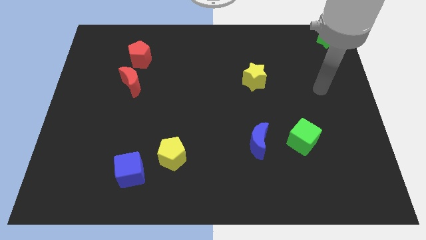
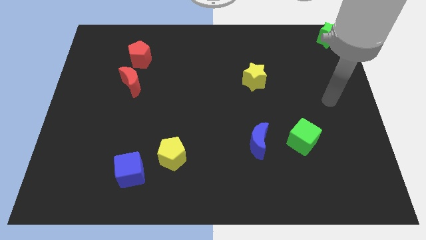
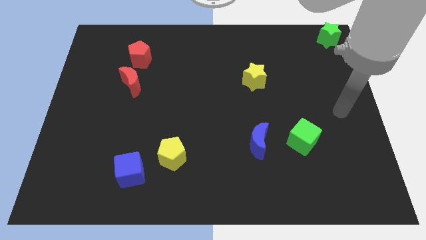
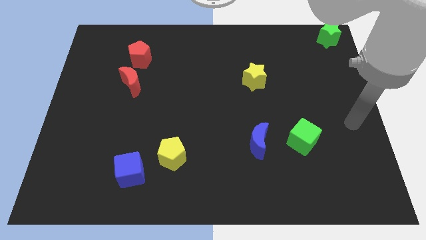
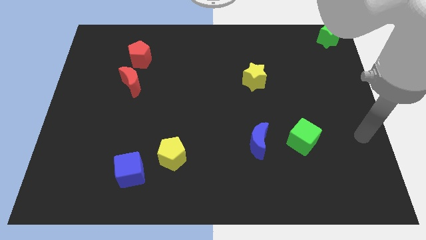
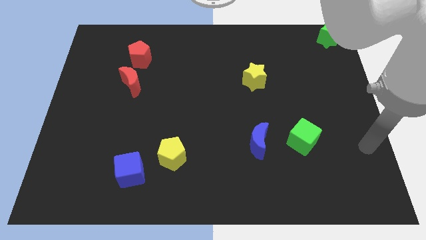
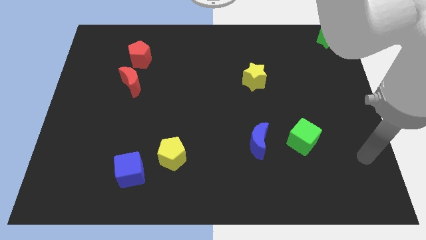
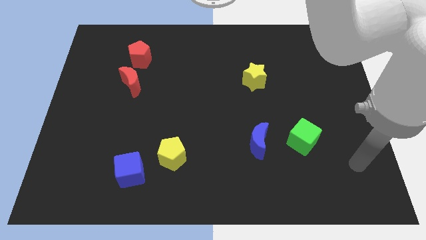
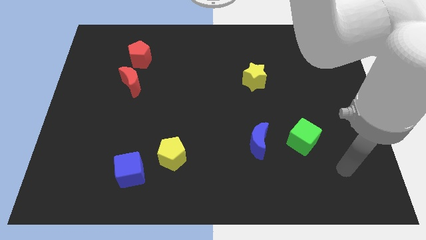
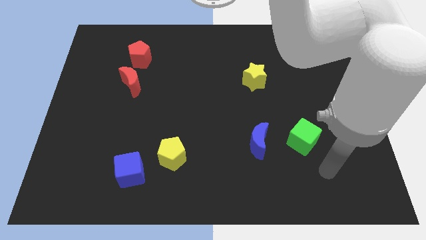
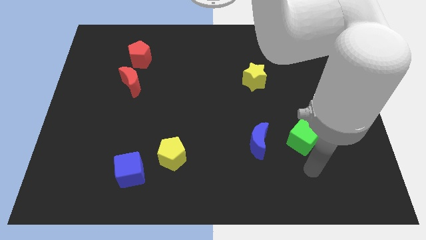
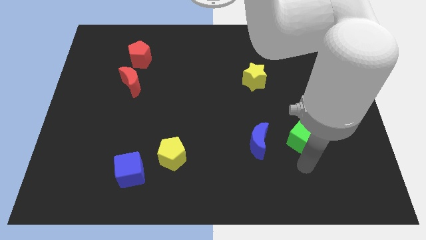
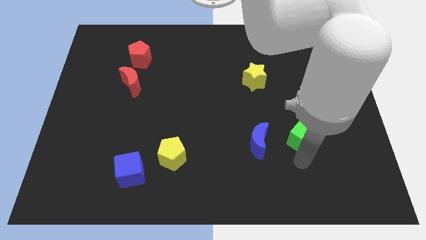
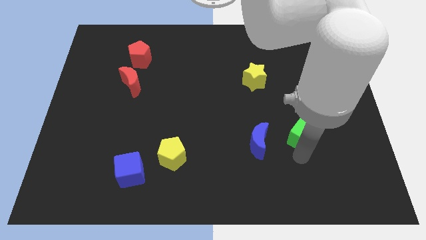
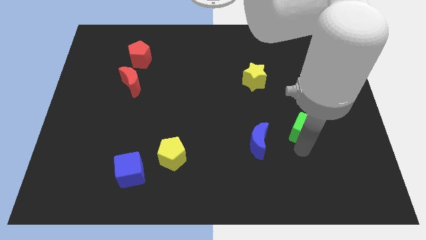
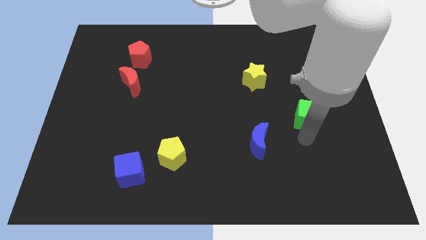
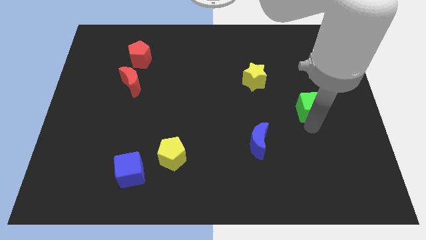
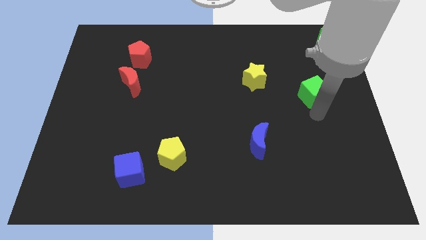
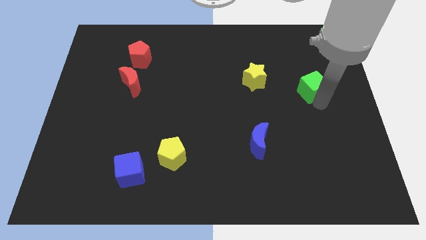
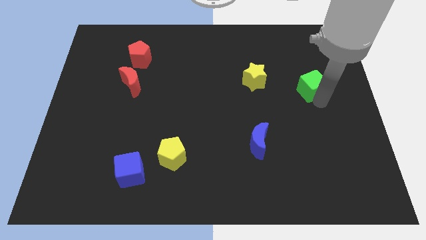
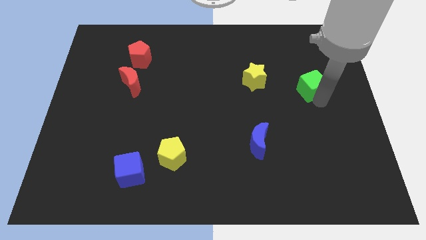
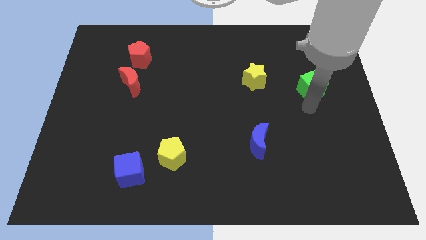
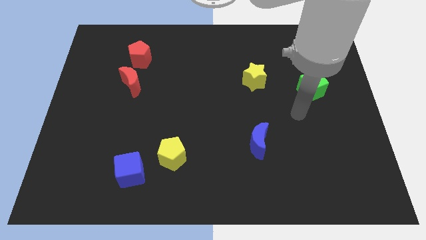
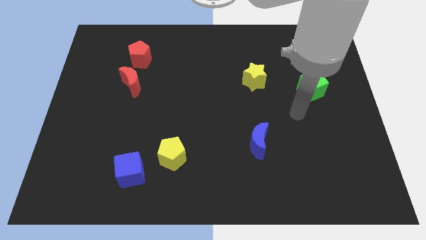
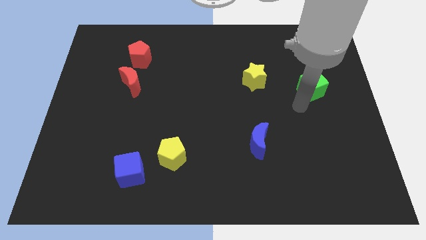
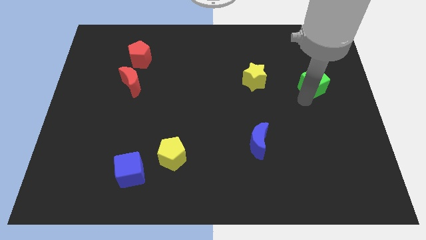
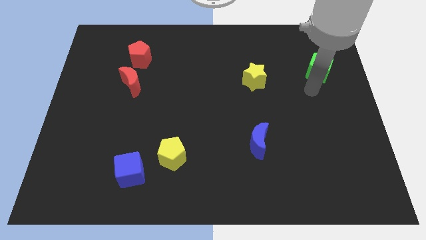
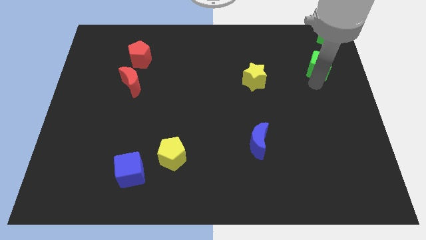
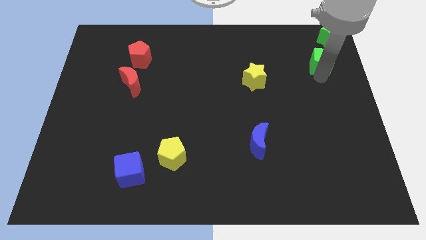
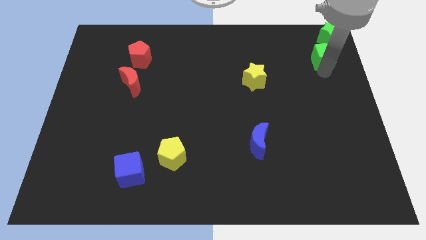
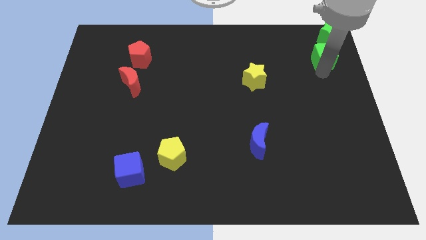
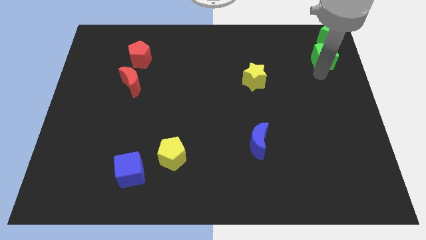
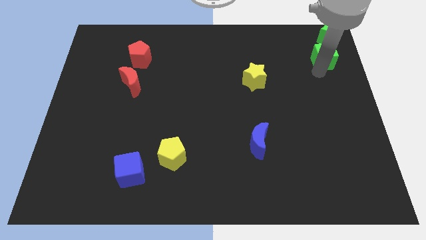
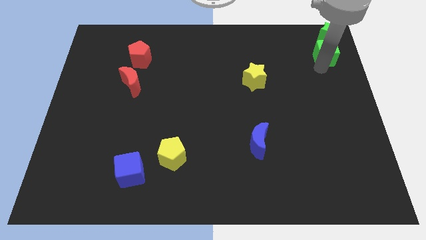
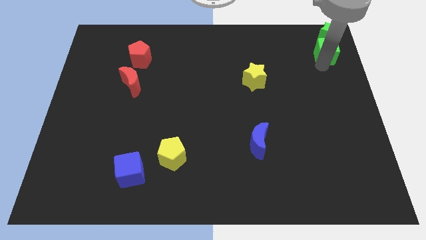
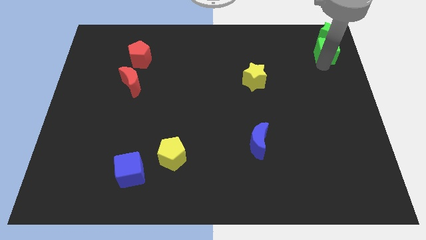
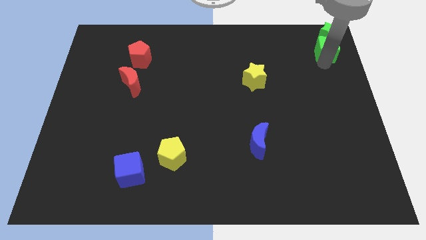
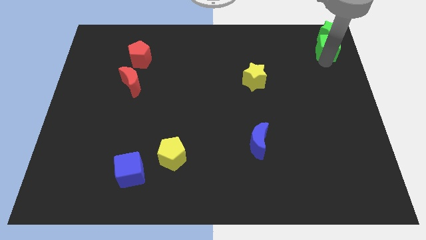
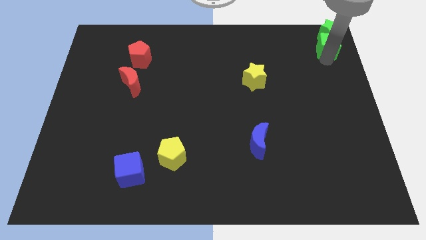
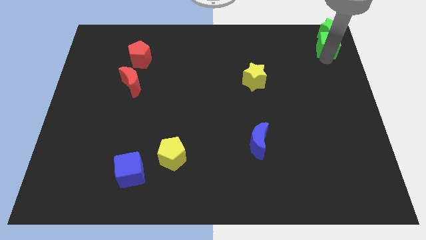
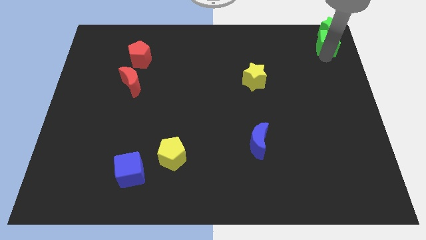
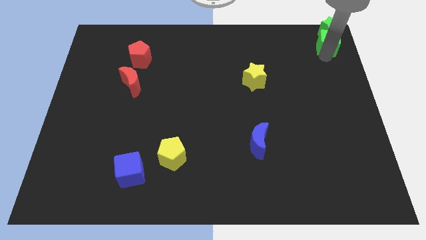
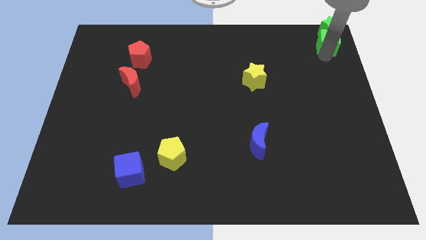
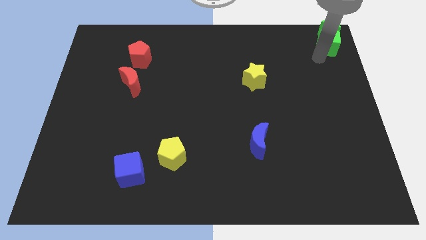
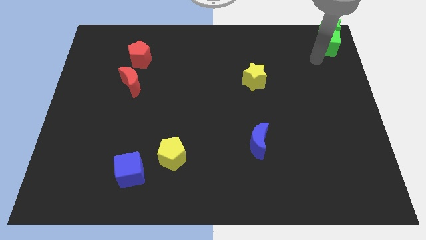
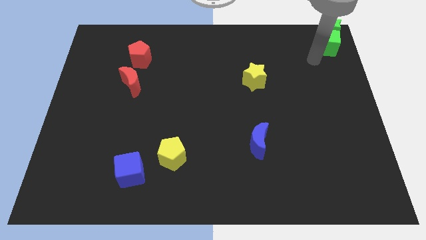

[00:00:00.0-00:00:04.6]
push the green cube towards the green star

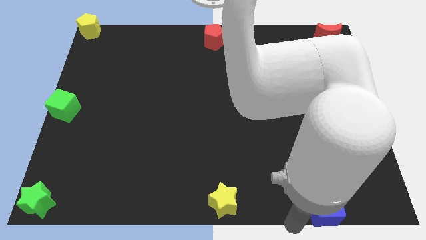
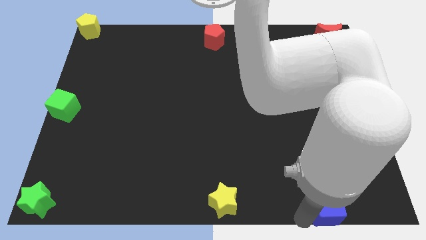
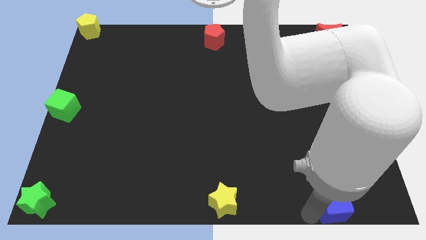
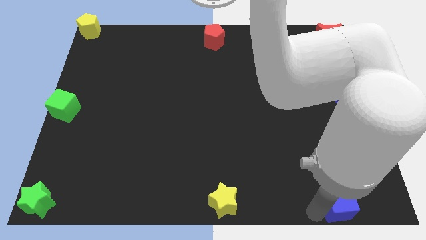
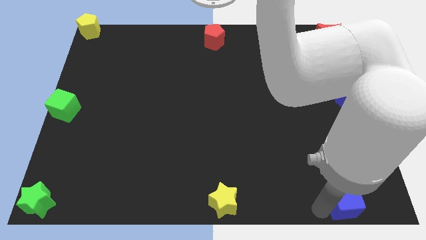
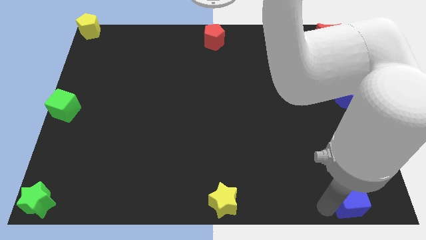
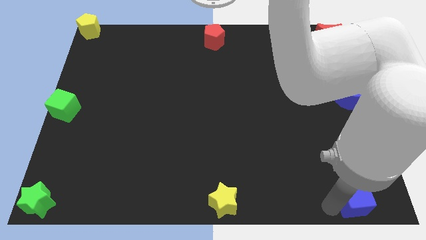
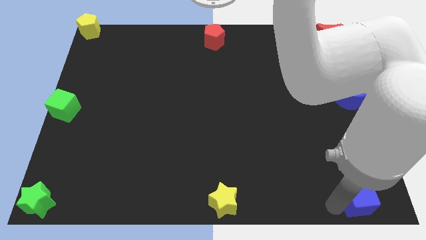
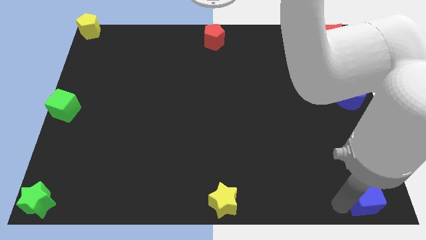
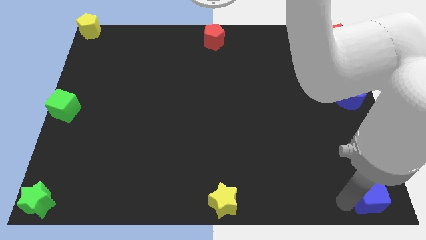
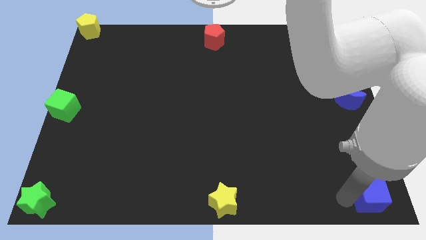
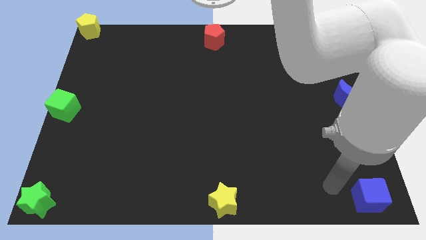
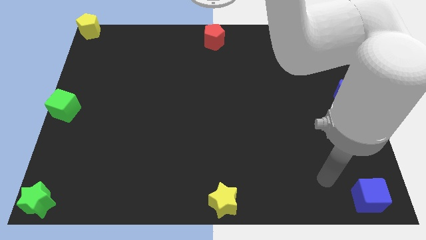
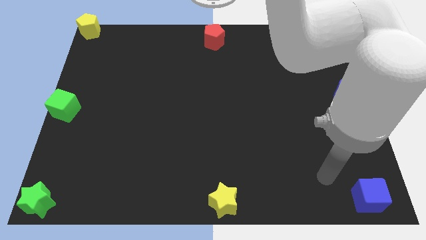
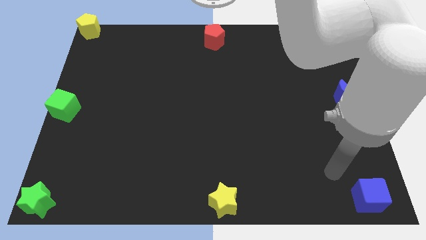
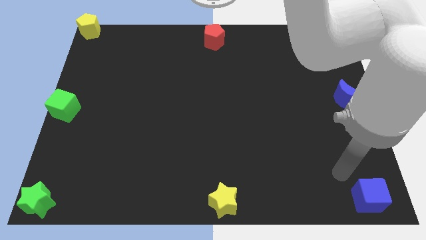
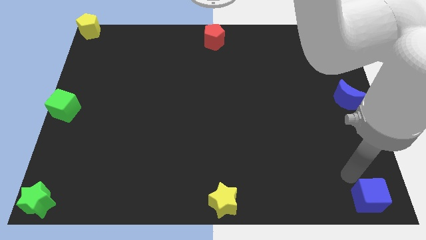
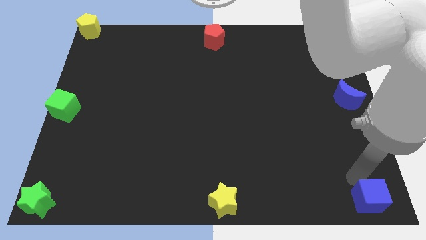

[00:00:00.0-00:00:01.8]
put the blue cube underneath the blue crescent

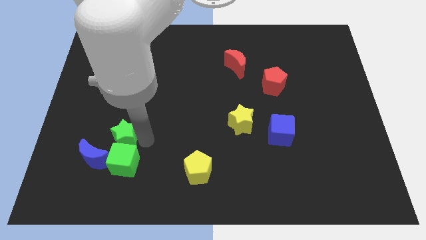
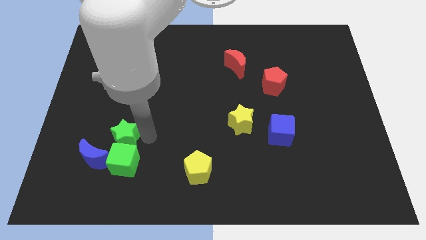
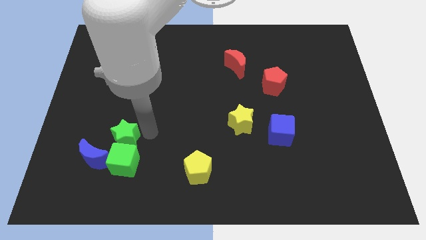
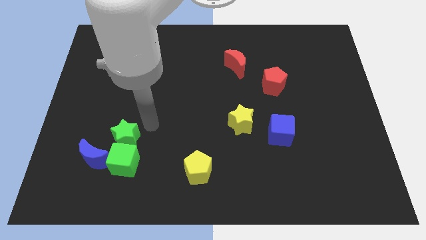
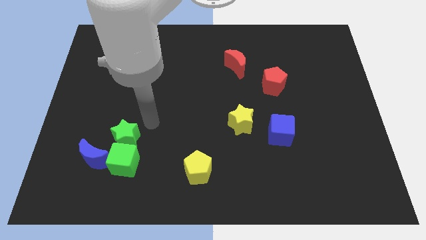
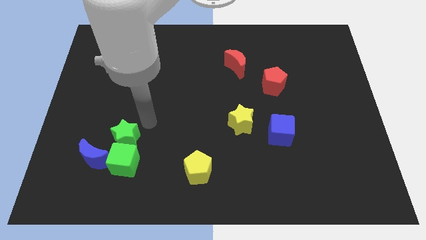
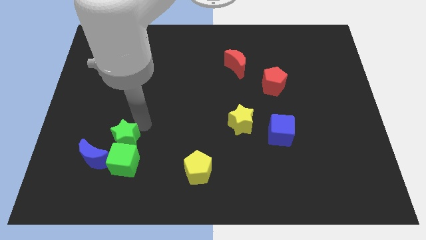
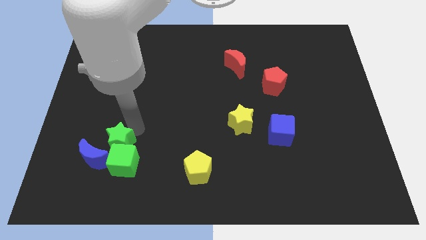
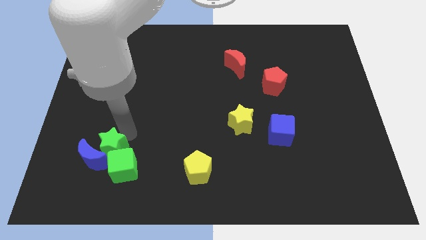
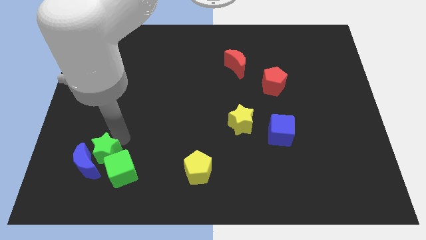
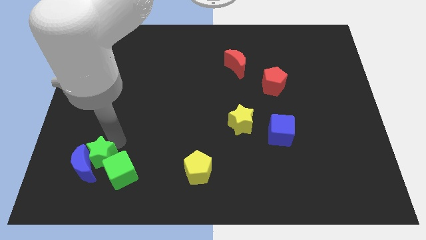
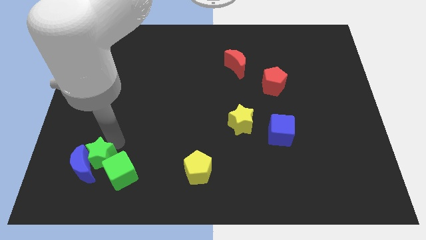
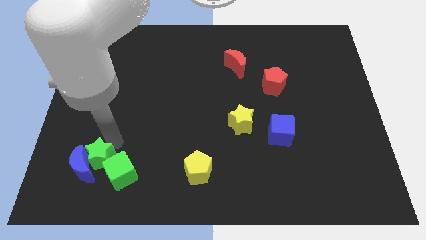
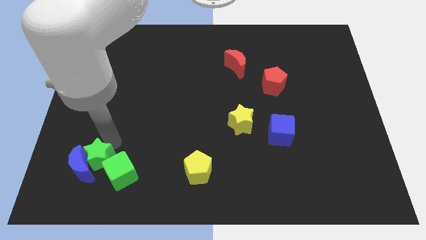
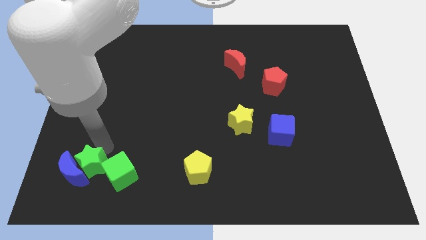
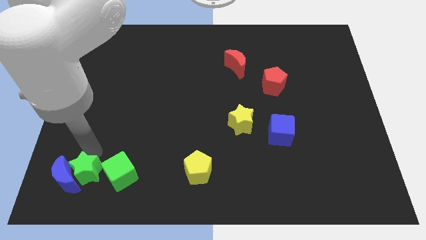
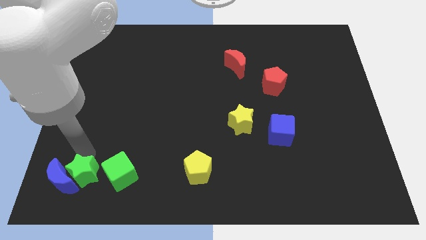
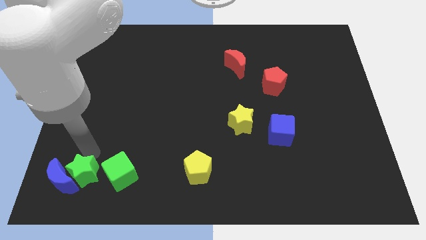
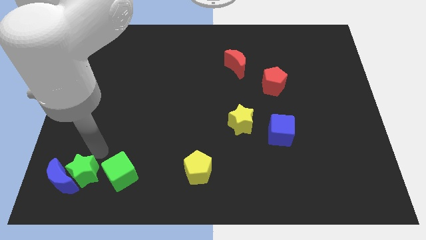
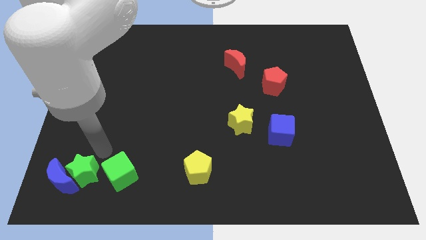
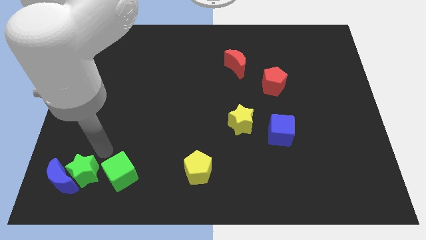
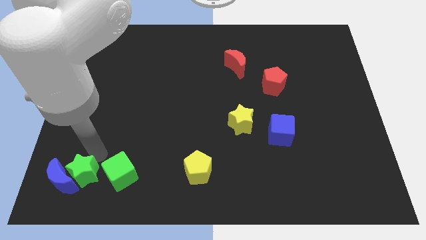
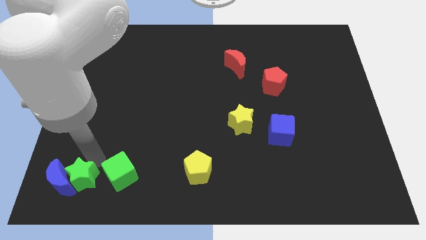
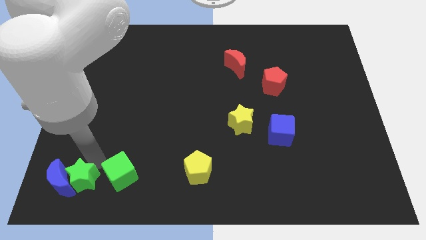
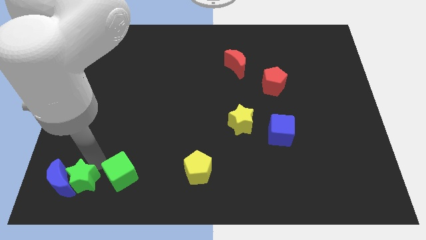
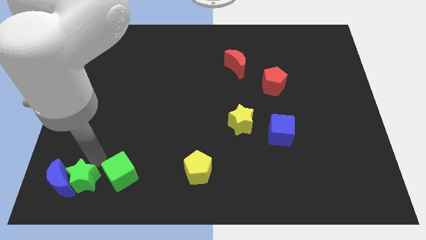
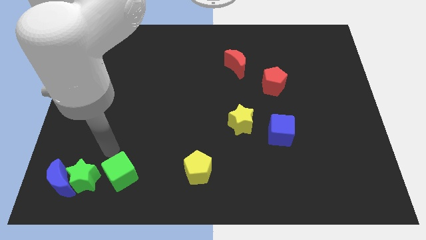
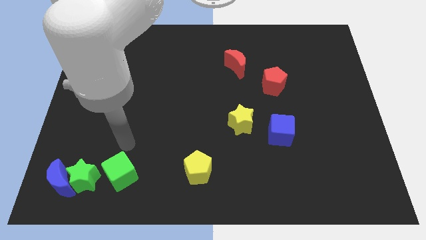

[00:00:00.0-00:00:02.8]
put the green star between the blue moon and green cube
